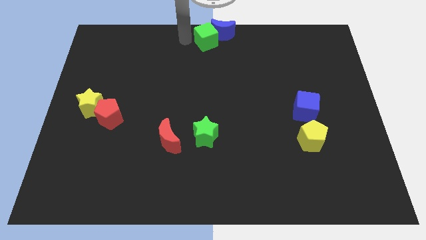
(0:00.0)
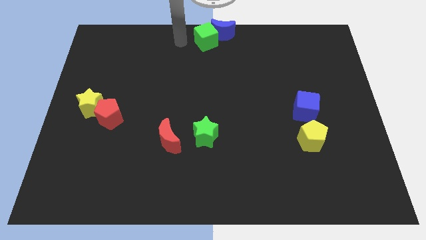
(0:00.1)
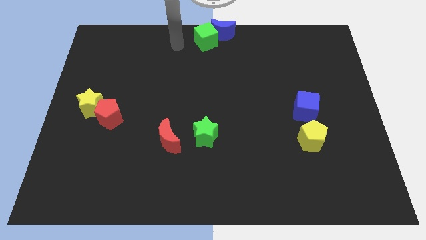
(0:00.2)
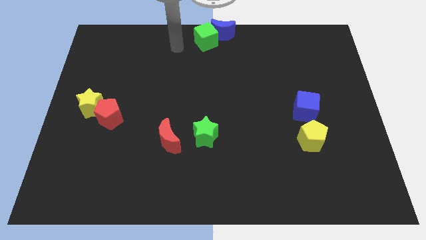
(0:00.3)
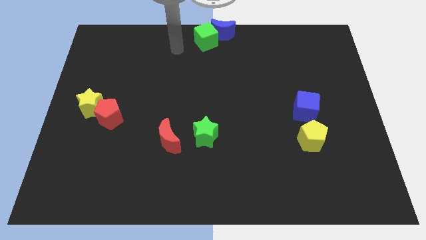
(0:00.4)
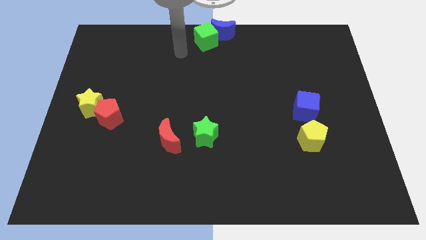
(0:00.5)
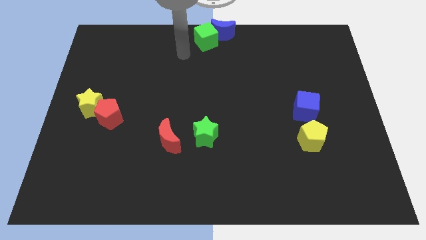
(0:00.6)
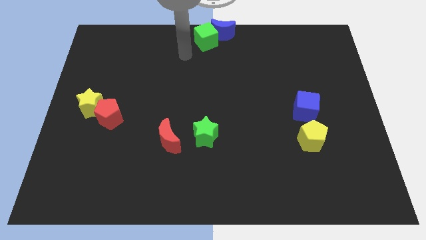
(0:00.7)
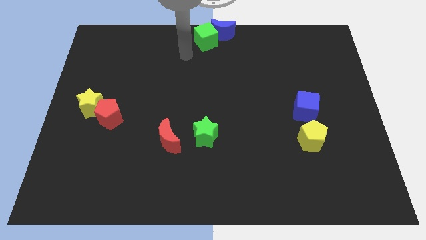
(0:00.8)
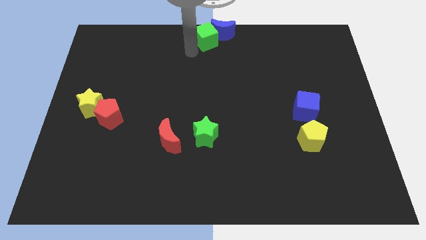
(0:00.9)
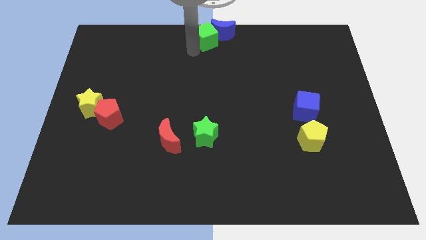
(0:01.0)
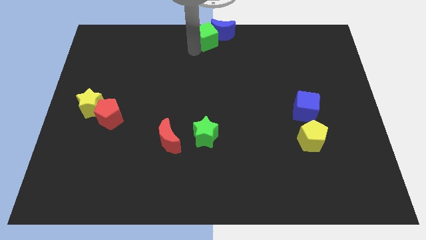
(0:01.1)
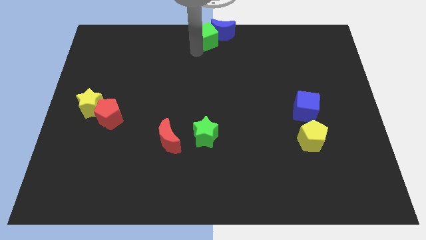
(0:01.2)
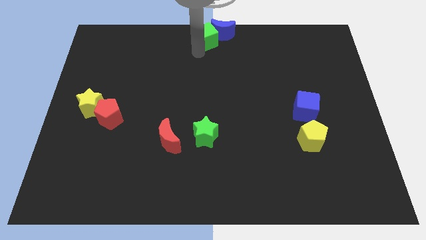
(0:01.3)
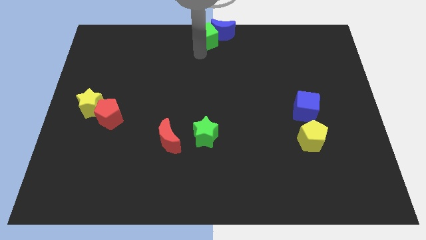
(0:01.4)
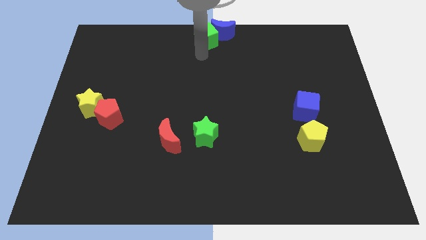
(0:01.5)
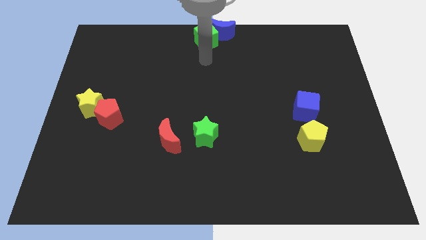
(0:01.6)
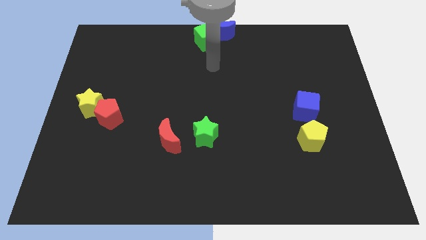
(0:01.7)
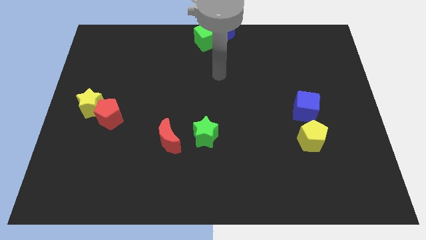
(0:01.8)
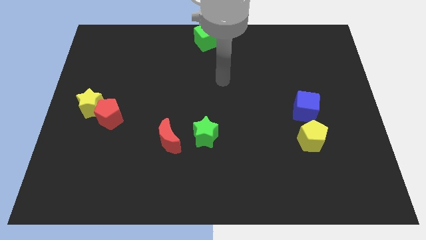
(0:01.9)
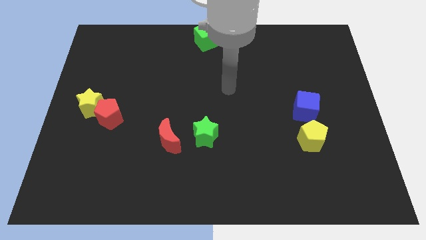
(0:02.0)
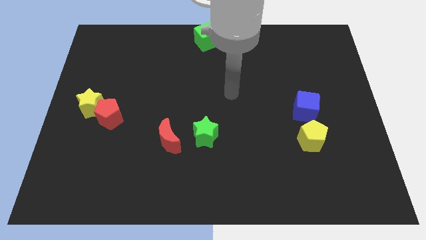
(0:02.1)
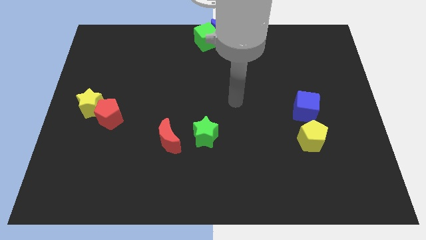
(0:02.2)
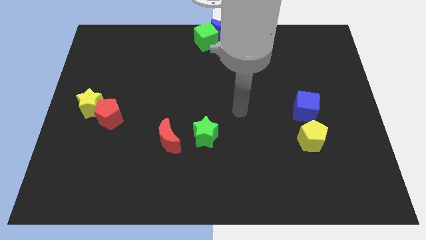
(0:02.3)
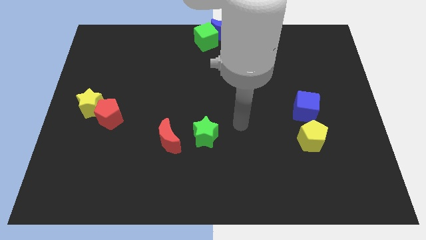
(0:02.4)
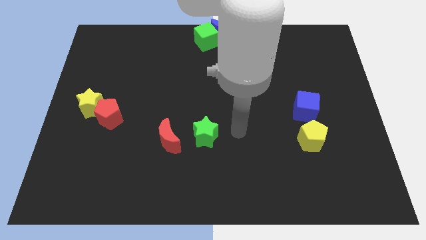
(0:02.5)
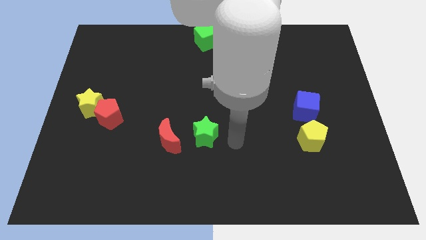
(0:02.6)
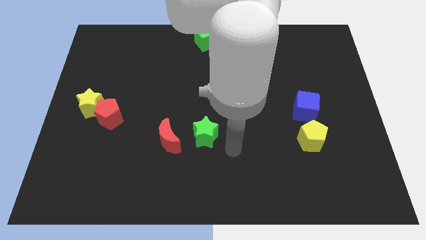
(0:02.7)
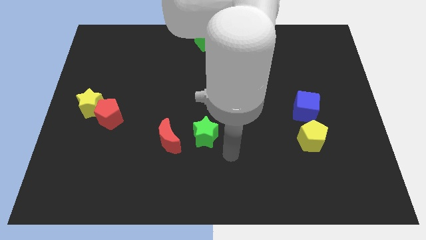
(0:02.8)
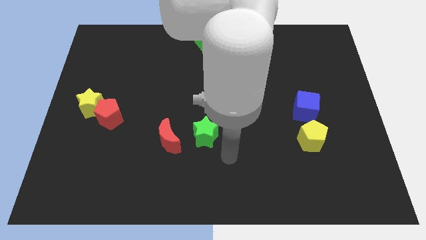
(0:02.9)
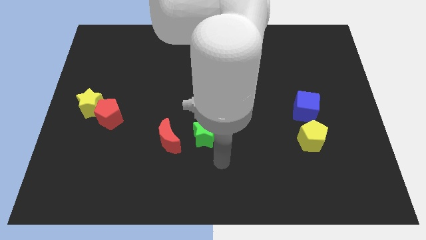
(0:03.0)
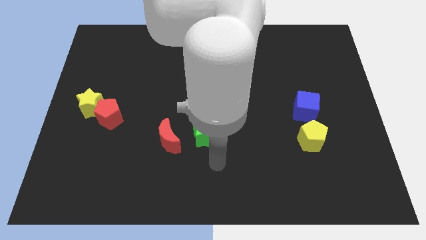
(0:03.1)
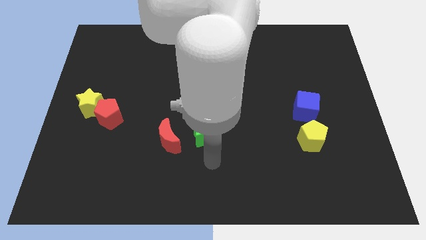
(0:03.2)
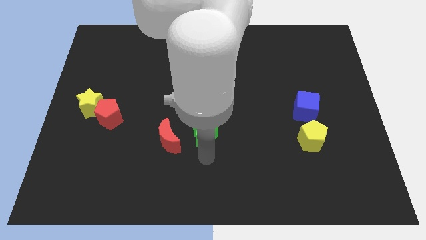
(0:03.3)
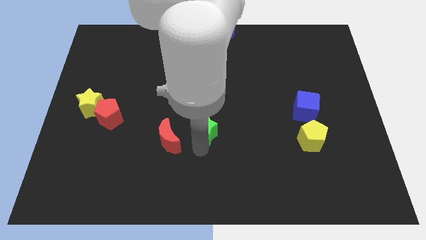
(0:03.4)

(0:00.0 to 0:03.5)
move the arm to the bottom of the green star

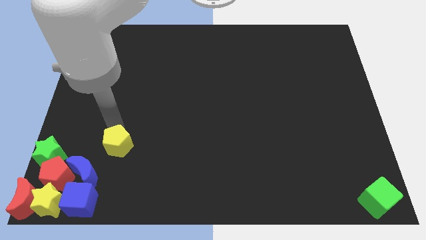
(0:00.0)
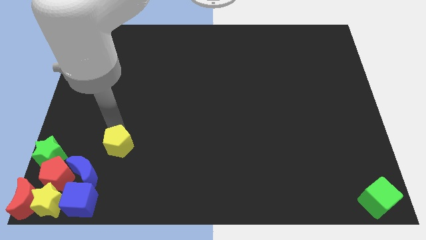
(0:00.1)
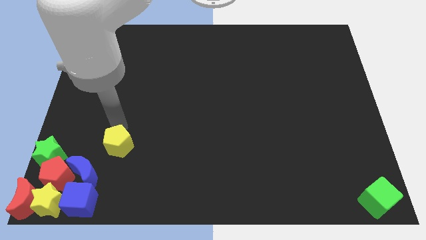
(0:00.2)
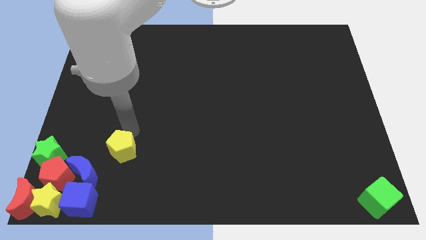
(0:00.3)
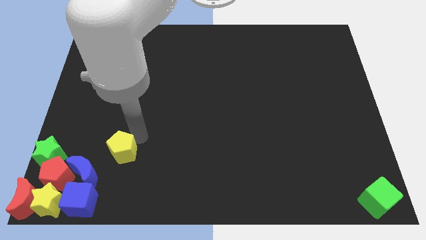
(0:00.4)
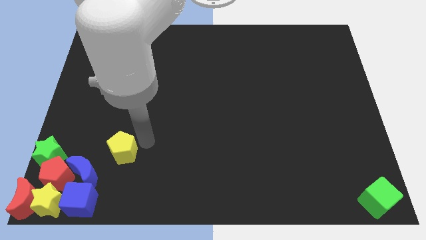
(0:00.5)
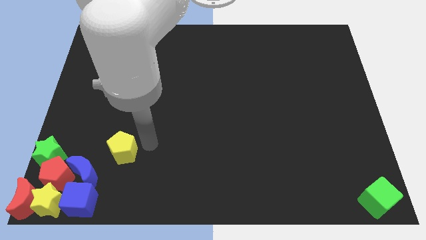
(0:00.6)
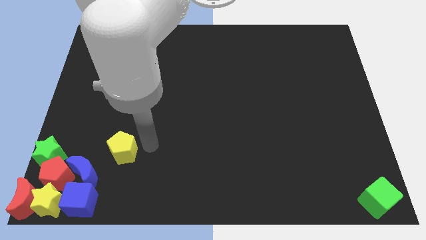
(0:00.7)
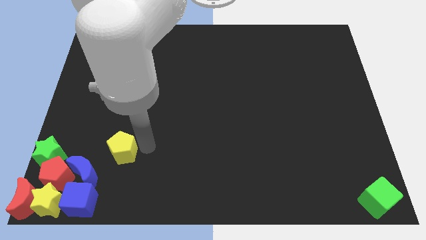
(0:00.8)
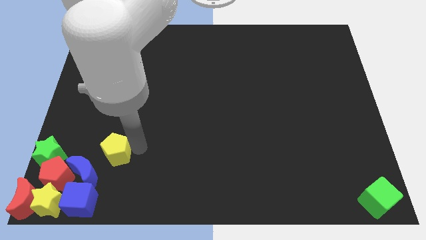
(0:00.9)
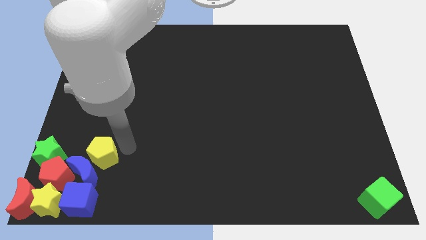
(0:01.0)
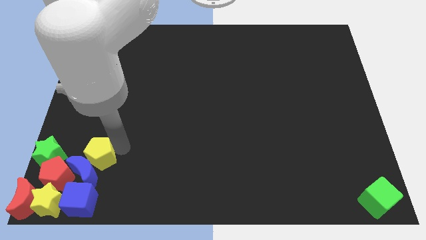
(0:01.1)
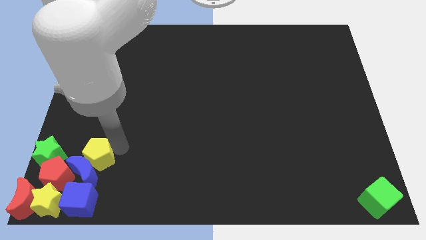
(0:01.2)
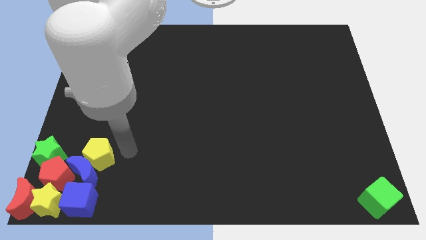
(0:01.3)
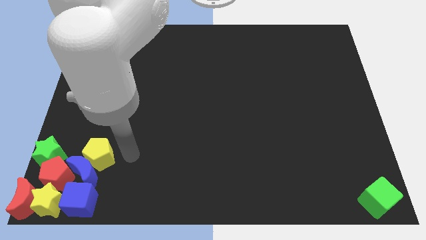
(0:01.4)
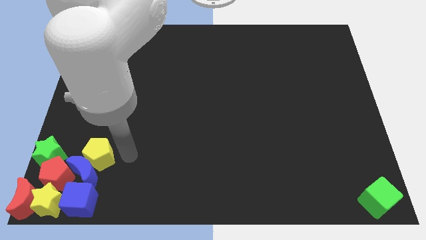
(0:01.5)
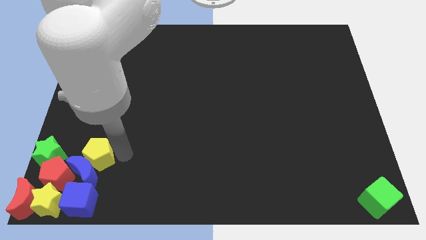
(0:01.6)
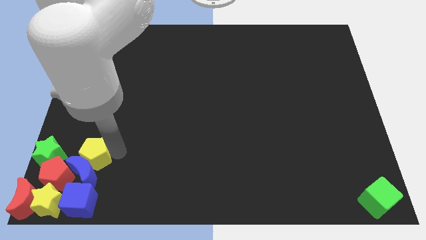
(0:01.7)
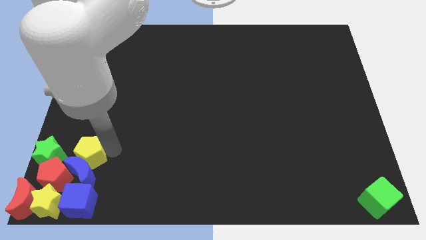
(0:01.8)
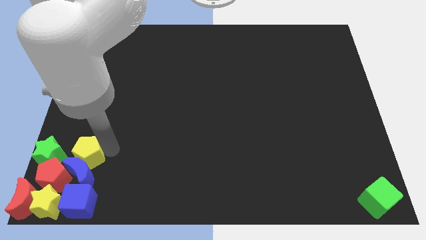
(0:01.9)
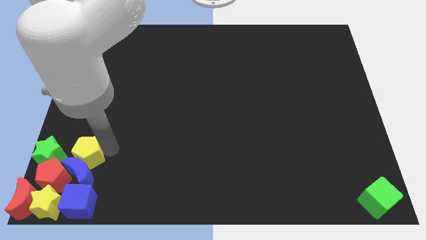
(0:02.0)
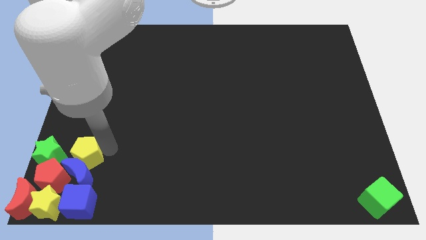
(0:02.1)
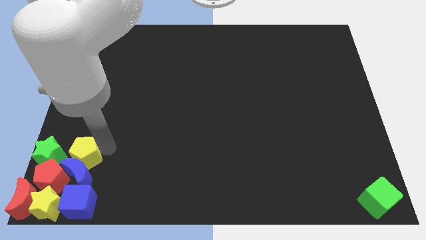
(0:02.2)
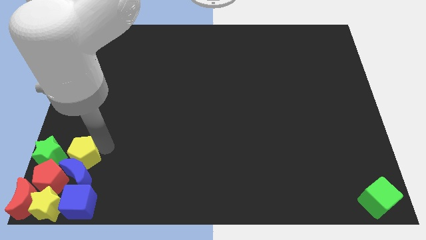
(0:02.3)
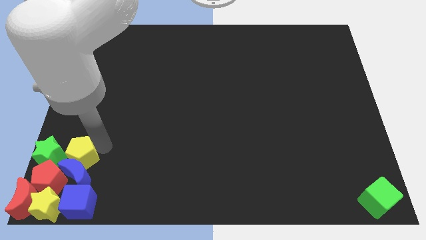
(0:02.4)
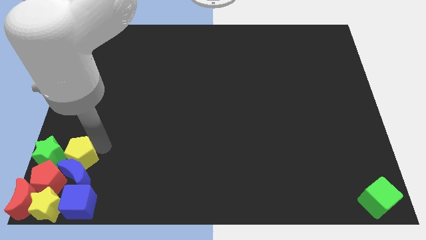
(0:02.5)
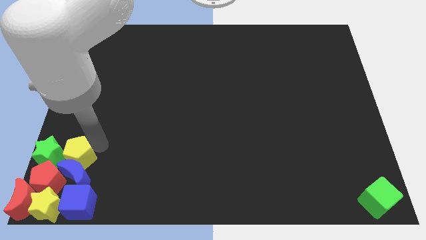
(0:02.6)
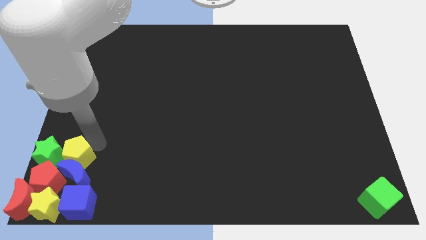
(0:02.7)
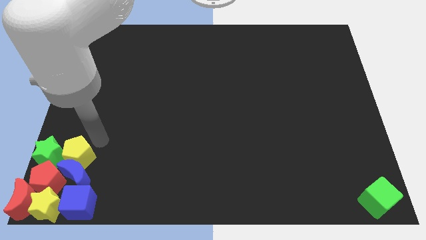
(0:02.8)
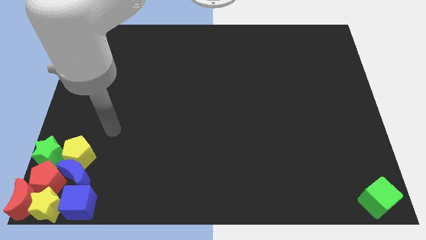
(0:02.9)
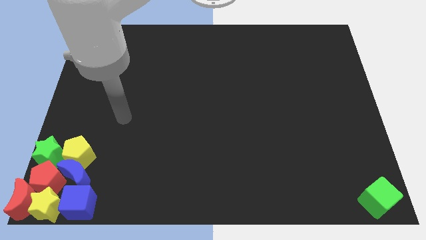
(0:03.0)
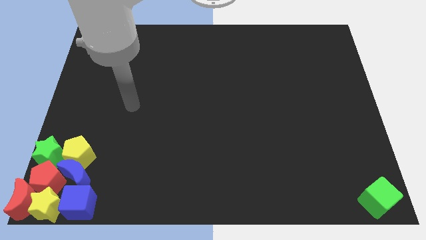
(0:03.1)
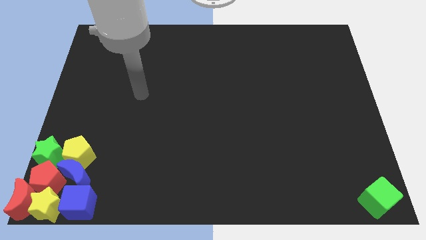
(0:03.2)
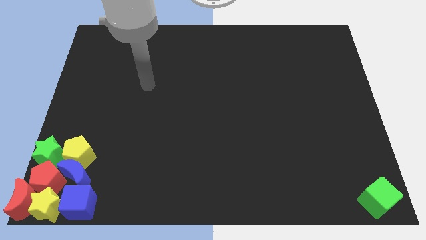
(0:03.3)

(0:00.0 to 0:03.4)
place the yellow pentagon above the blue moon

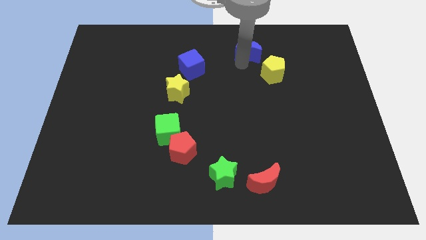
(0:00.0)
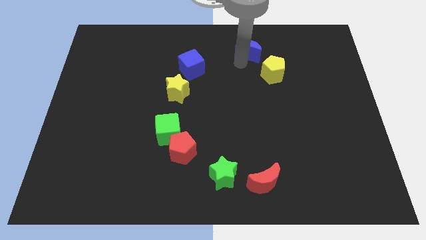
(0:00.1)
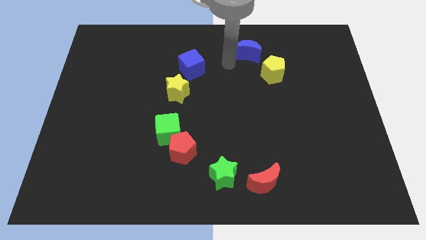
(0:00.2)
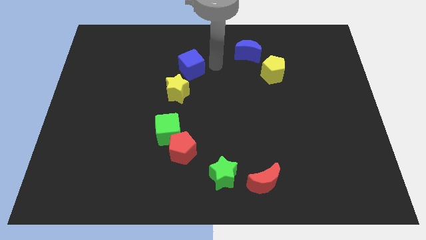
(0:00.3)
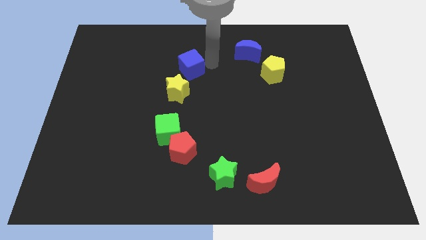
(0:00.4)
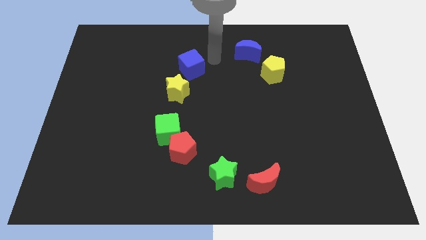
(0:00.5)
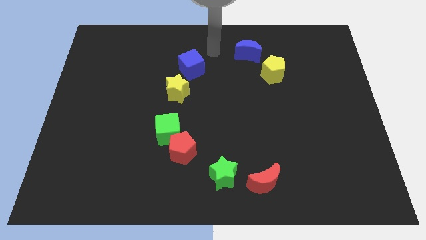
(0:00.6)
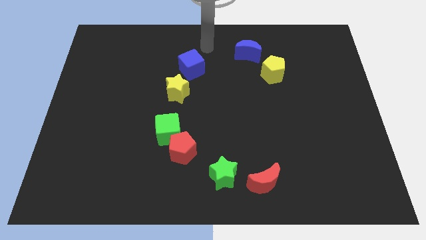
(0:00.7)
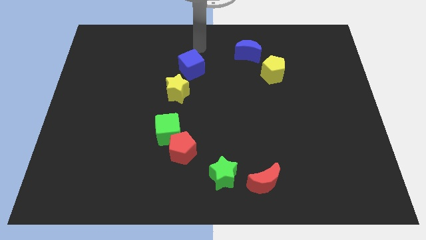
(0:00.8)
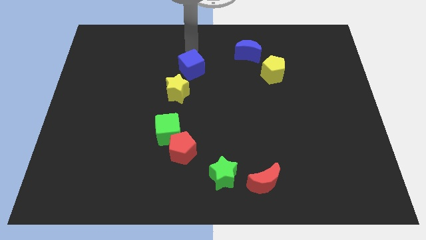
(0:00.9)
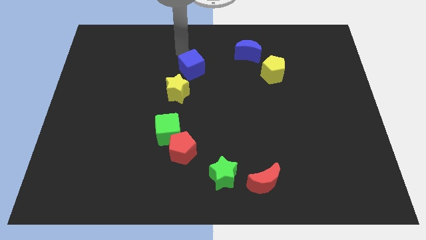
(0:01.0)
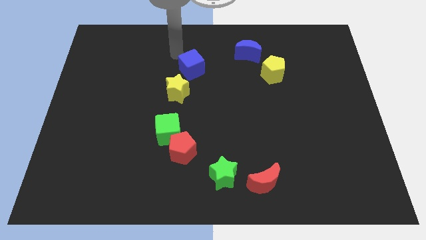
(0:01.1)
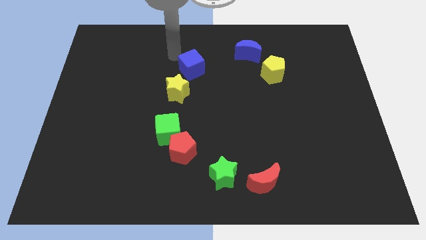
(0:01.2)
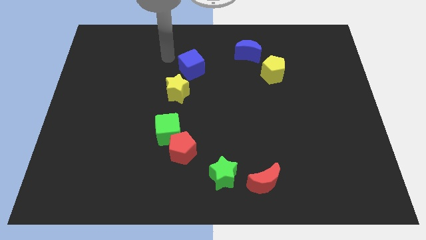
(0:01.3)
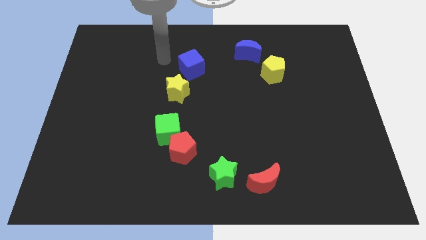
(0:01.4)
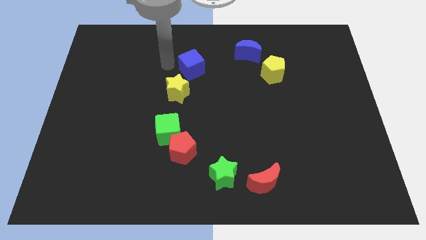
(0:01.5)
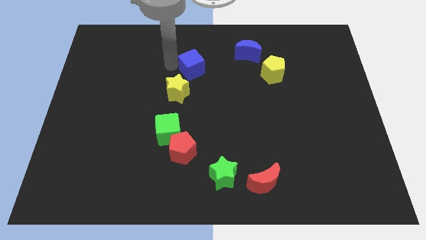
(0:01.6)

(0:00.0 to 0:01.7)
move the arm left to the blue cube

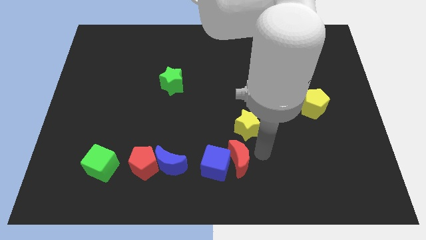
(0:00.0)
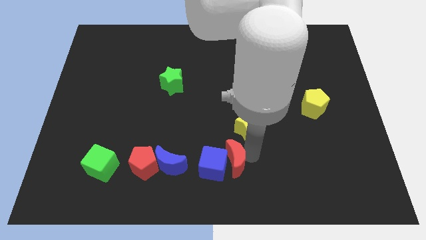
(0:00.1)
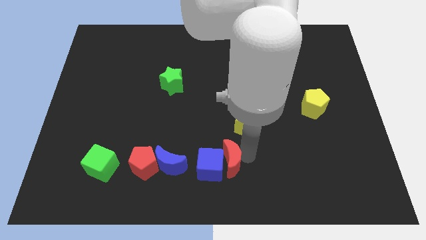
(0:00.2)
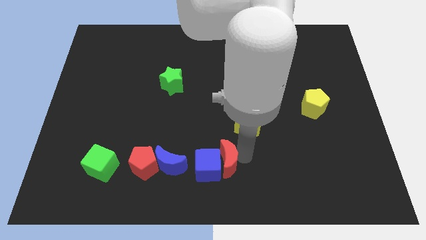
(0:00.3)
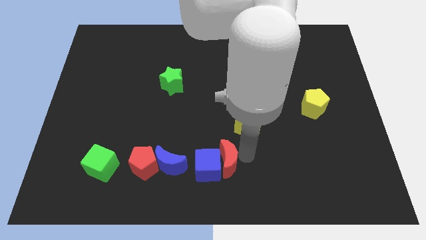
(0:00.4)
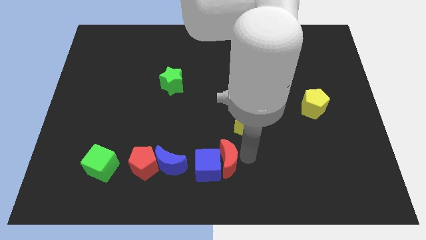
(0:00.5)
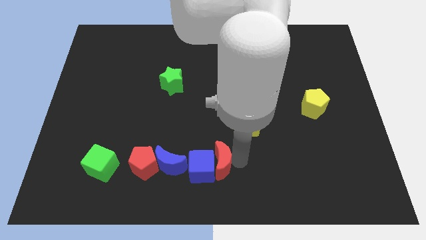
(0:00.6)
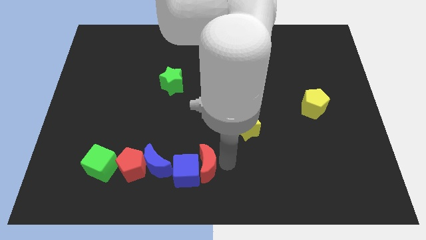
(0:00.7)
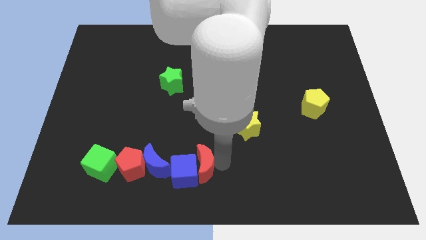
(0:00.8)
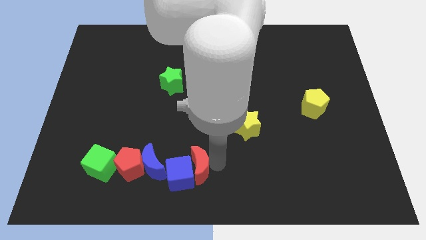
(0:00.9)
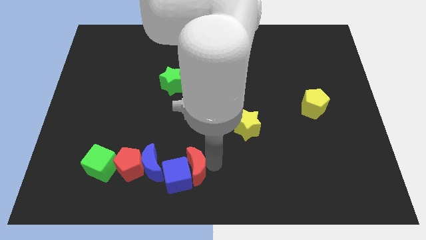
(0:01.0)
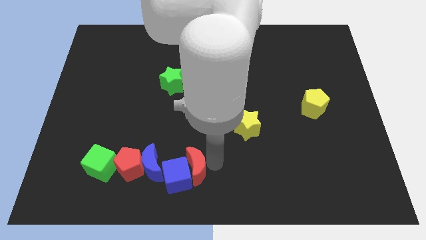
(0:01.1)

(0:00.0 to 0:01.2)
place red crescent below green star
